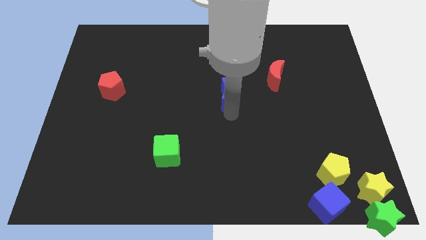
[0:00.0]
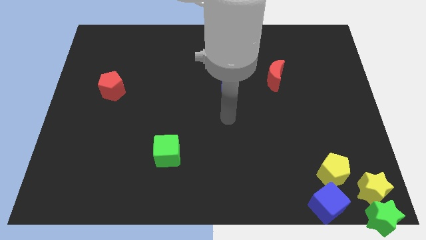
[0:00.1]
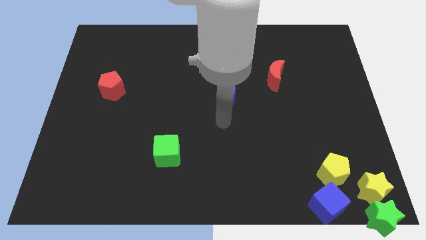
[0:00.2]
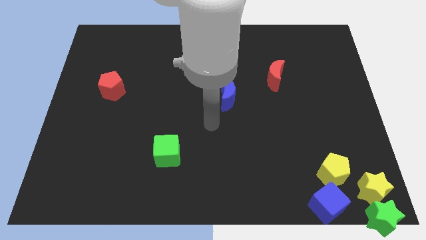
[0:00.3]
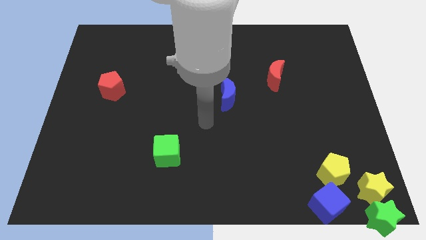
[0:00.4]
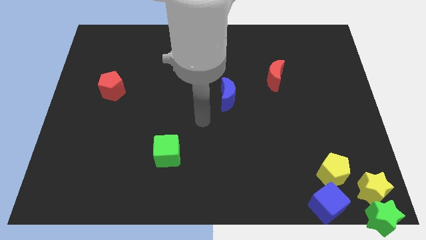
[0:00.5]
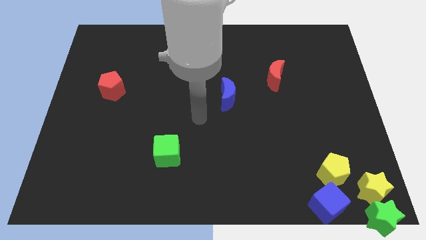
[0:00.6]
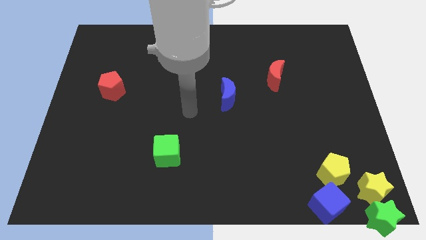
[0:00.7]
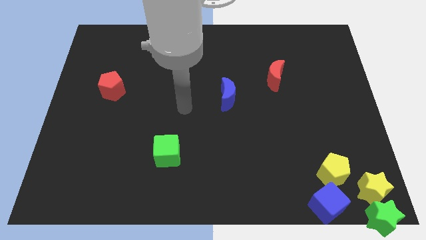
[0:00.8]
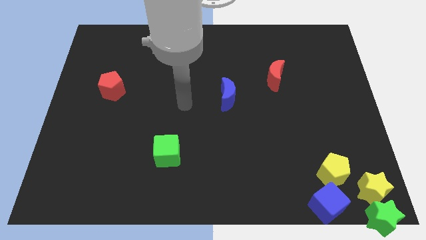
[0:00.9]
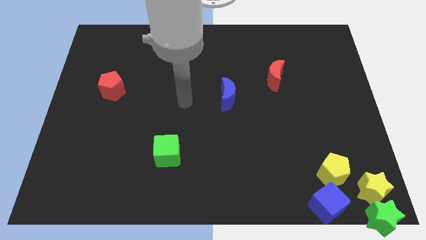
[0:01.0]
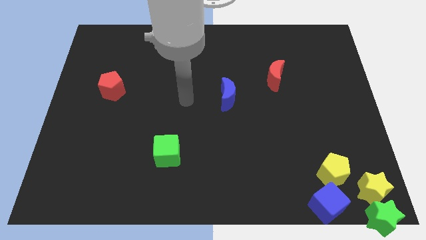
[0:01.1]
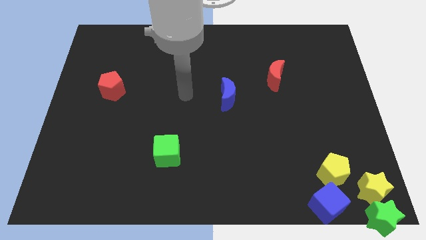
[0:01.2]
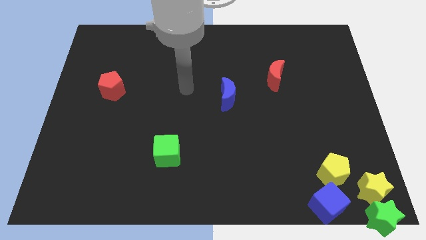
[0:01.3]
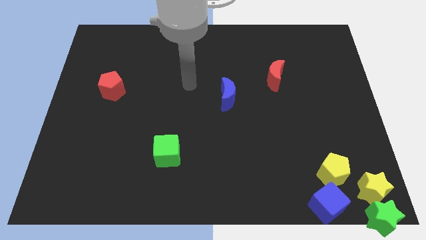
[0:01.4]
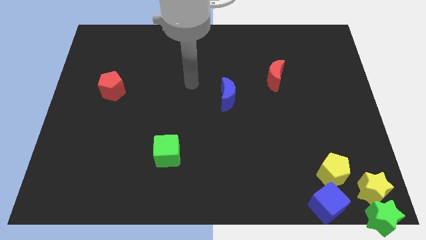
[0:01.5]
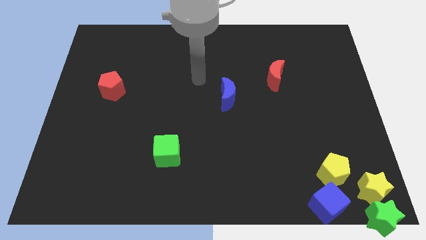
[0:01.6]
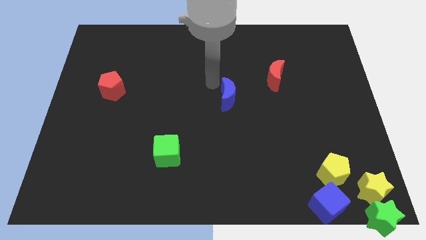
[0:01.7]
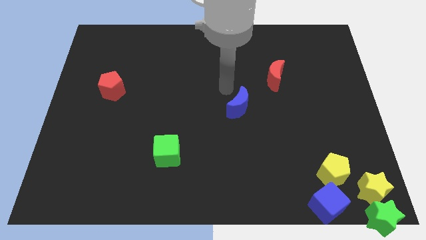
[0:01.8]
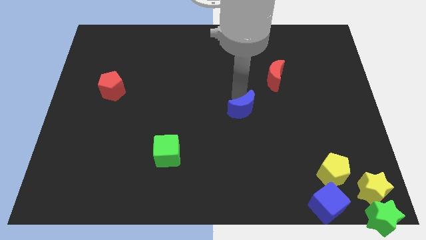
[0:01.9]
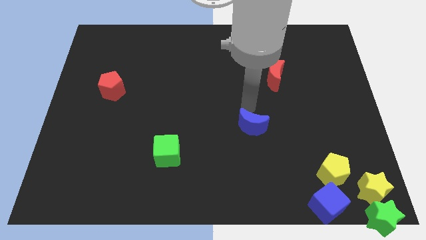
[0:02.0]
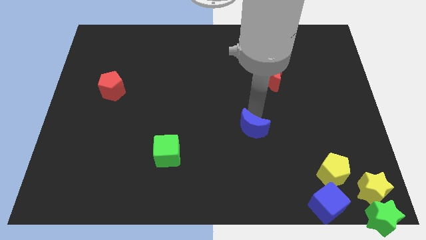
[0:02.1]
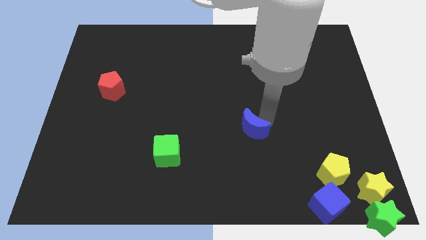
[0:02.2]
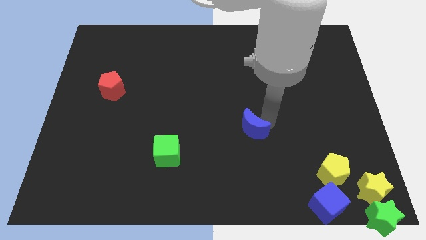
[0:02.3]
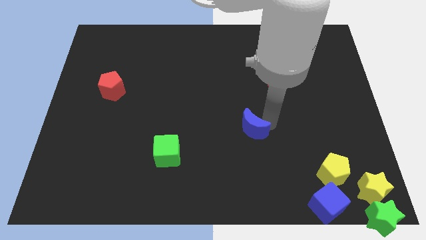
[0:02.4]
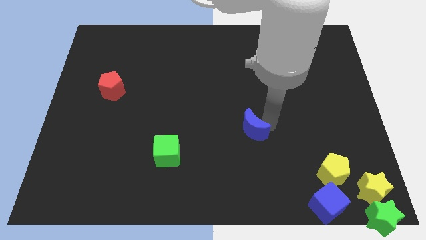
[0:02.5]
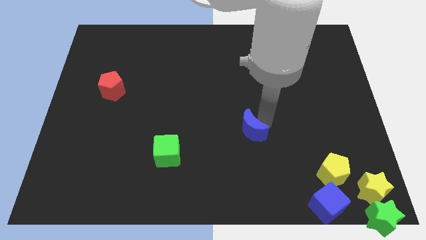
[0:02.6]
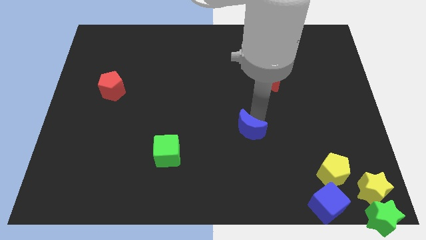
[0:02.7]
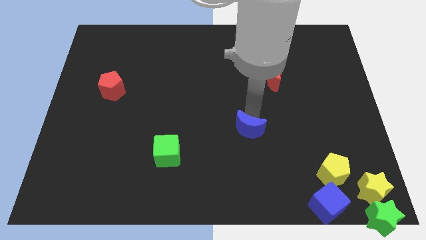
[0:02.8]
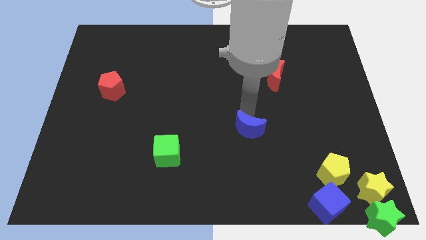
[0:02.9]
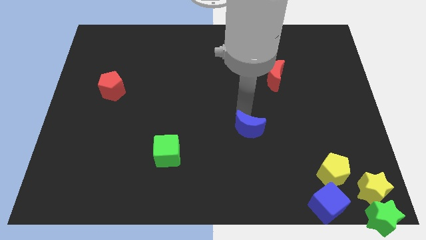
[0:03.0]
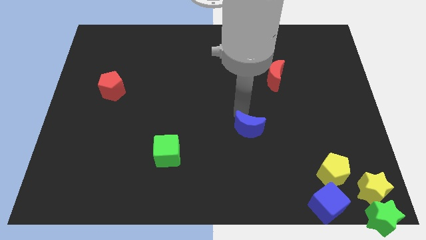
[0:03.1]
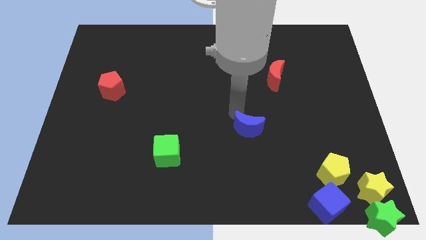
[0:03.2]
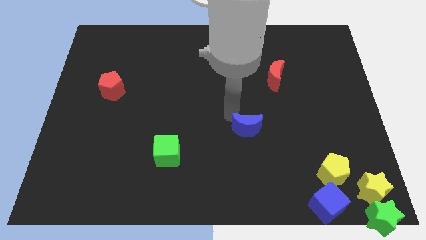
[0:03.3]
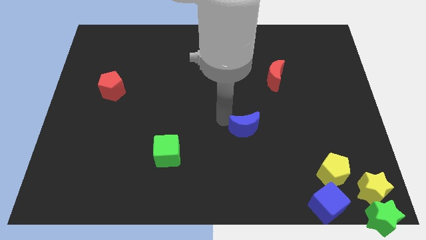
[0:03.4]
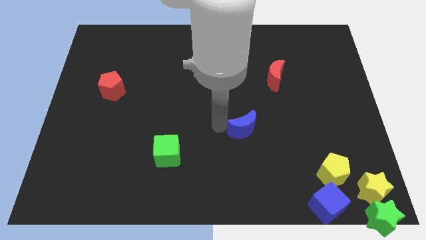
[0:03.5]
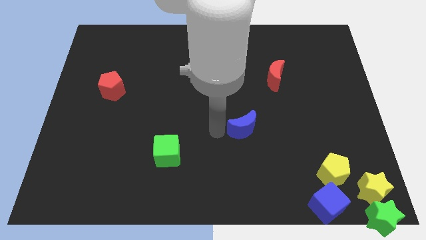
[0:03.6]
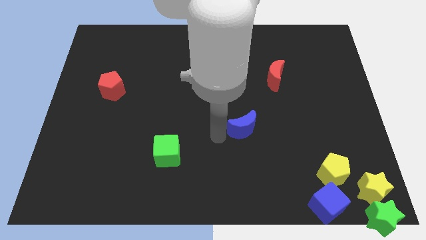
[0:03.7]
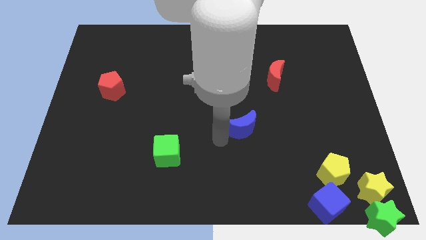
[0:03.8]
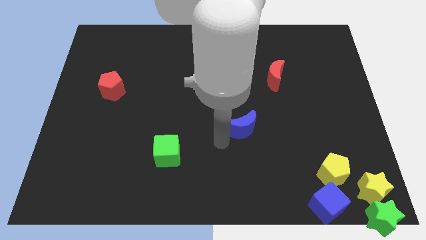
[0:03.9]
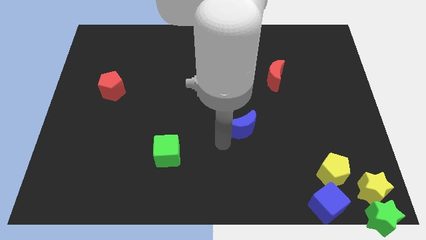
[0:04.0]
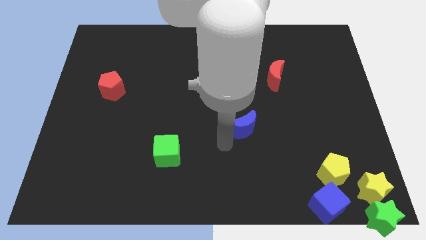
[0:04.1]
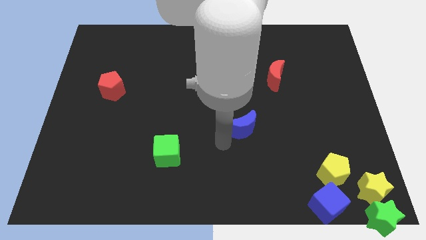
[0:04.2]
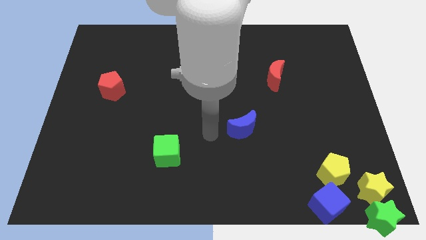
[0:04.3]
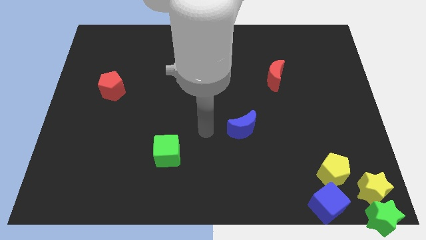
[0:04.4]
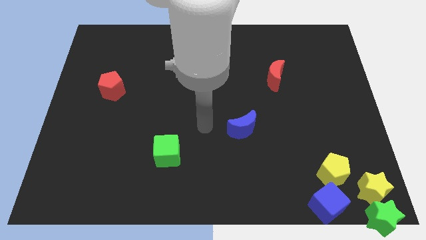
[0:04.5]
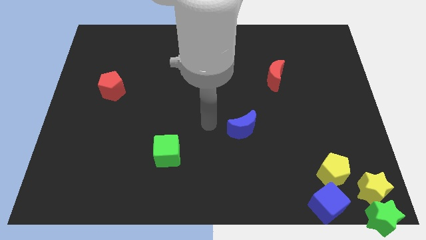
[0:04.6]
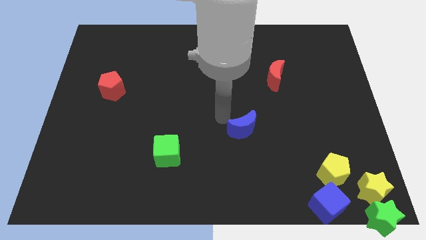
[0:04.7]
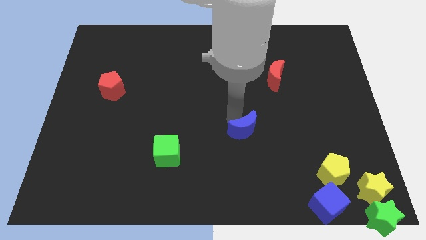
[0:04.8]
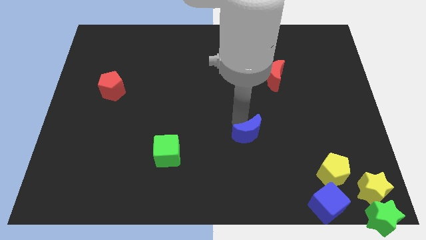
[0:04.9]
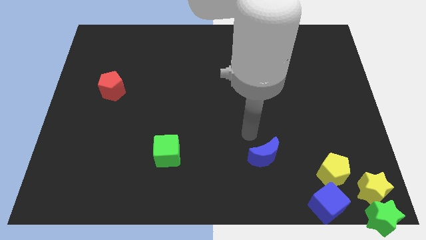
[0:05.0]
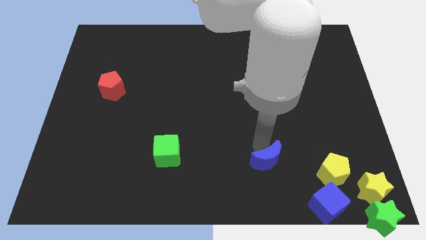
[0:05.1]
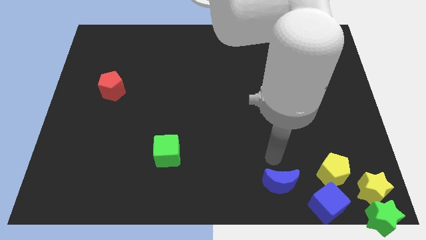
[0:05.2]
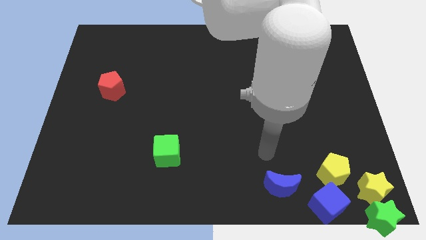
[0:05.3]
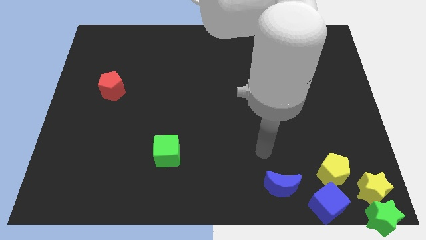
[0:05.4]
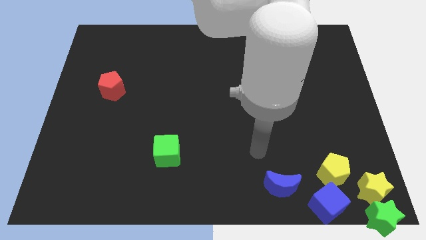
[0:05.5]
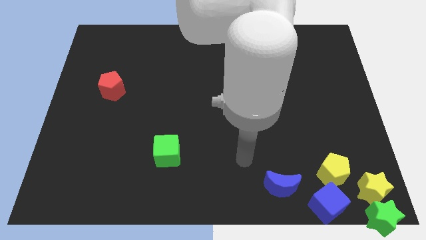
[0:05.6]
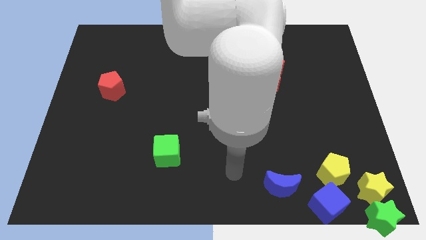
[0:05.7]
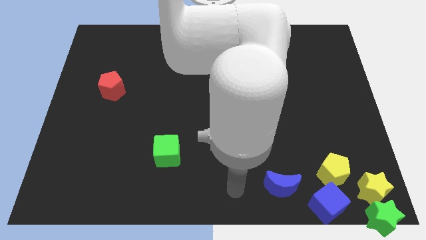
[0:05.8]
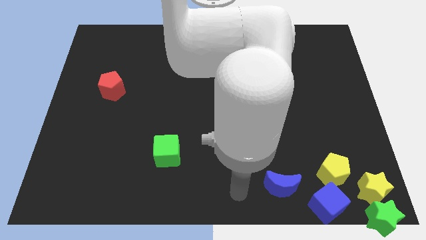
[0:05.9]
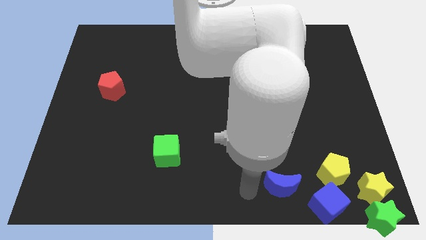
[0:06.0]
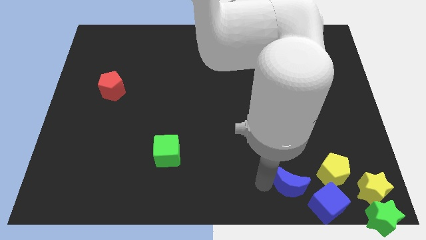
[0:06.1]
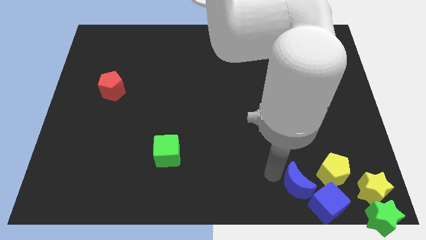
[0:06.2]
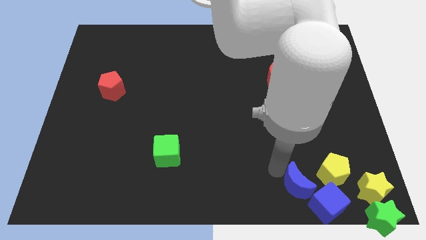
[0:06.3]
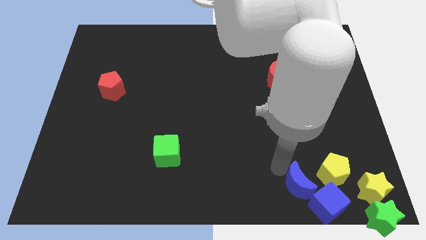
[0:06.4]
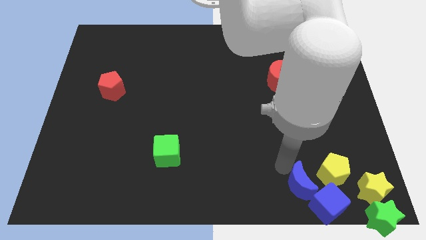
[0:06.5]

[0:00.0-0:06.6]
push the blue moon towards the blue cube at the bottom right

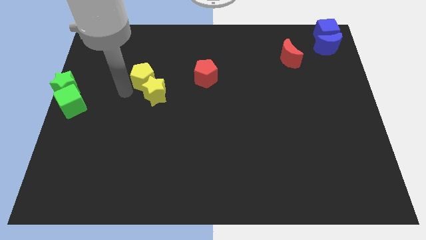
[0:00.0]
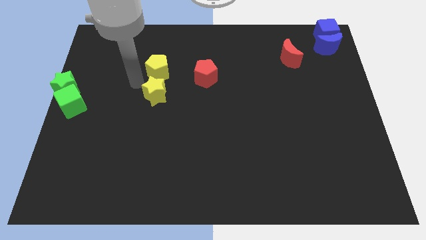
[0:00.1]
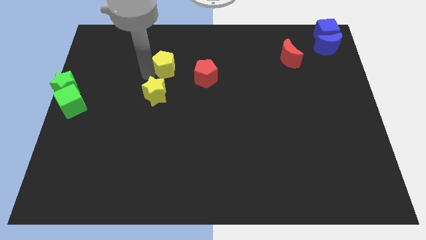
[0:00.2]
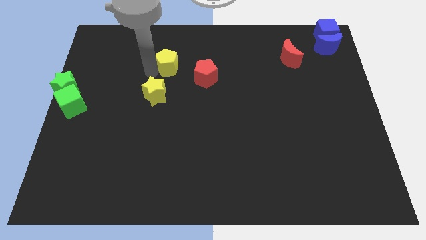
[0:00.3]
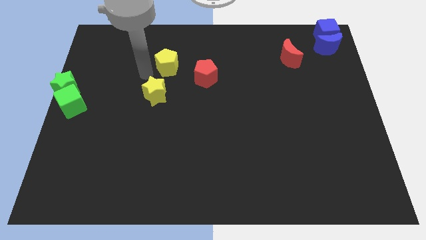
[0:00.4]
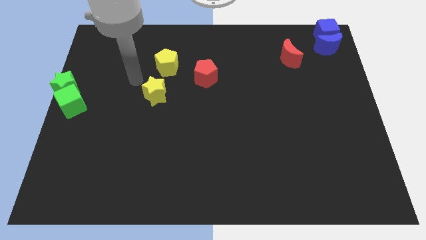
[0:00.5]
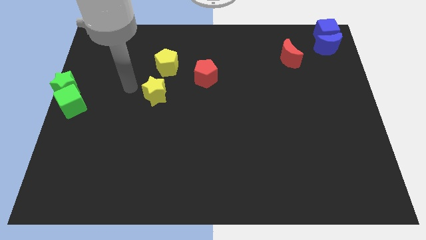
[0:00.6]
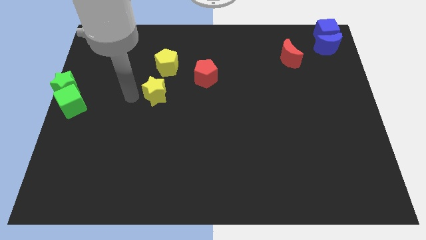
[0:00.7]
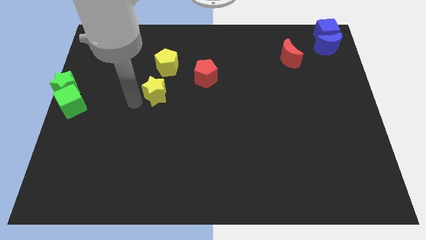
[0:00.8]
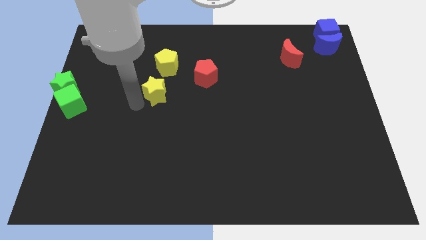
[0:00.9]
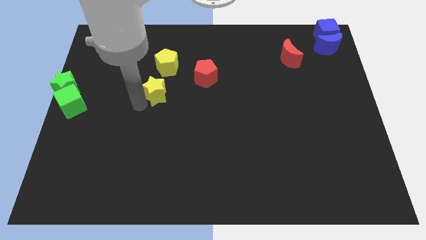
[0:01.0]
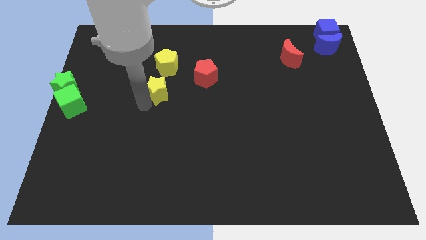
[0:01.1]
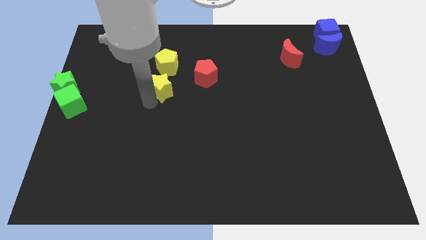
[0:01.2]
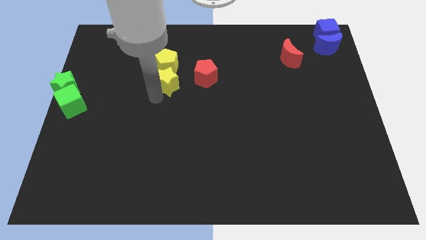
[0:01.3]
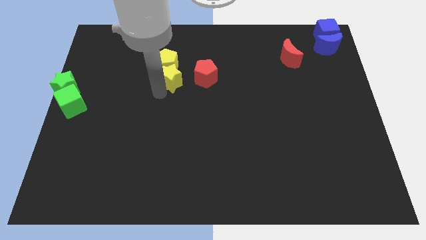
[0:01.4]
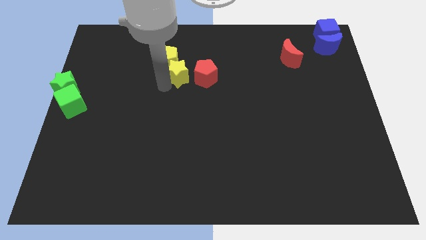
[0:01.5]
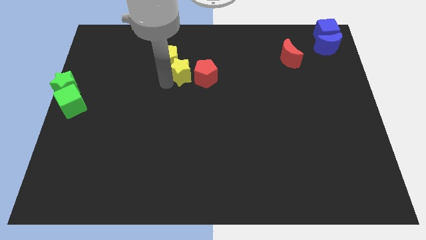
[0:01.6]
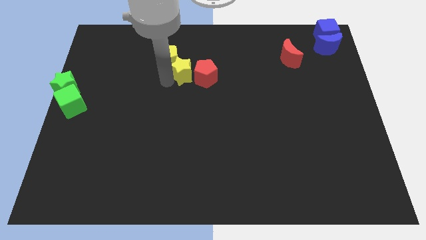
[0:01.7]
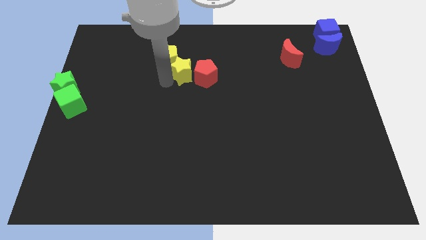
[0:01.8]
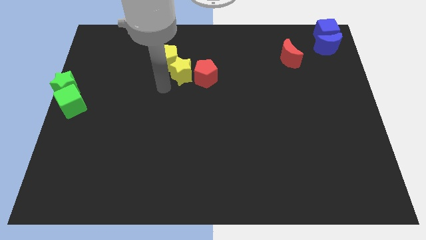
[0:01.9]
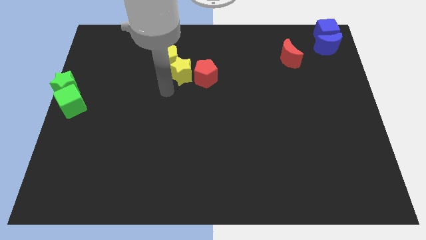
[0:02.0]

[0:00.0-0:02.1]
place the yellow star left to the red pentagon

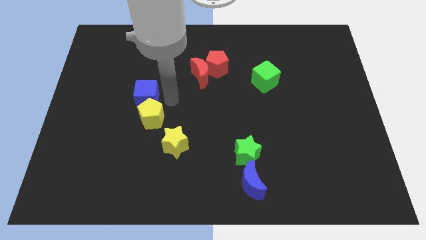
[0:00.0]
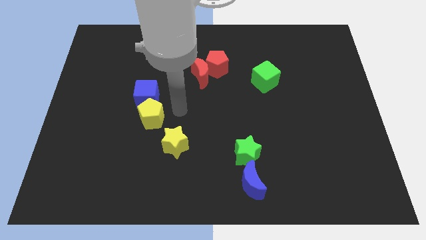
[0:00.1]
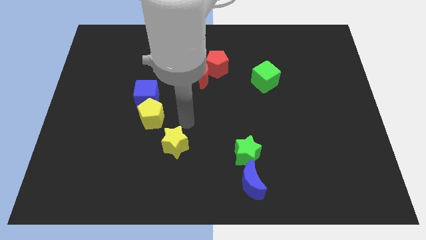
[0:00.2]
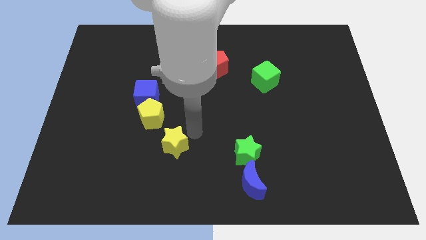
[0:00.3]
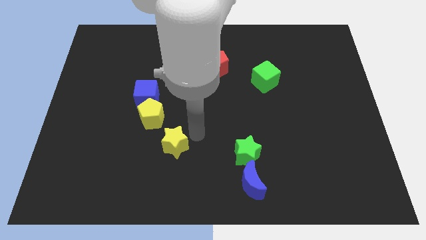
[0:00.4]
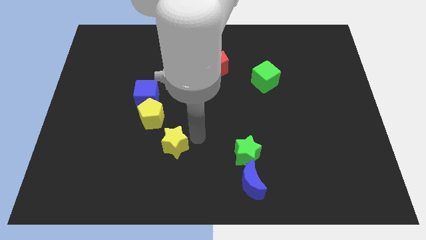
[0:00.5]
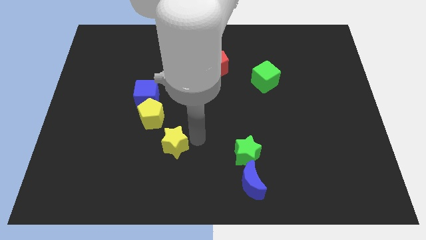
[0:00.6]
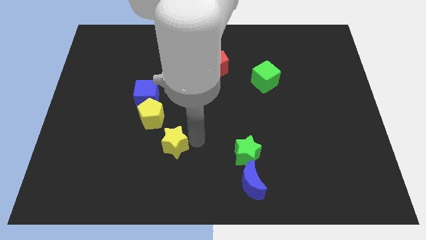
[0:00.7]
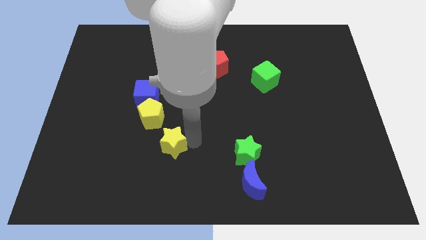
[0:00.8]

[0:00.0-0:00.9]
tap the yellow star
